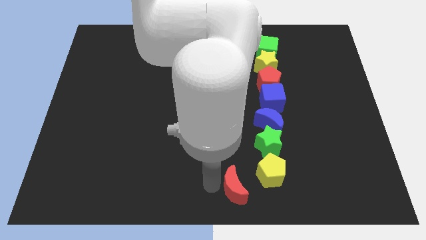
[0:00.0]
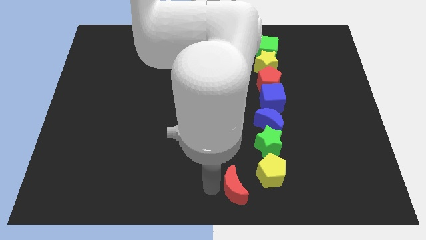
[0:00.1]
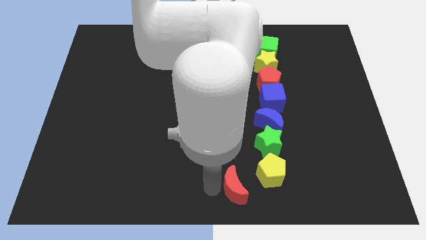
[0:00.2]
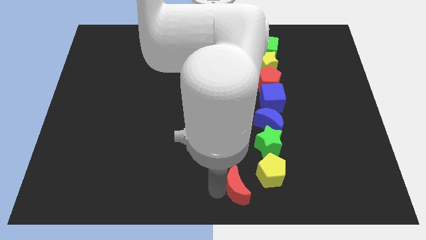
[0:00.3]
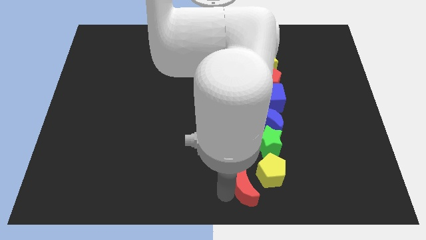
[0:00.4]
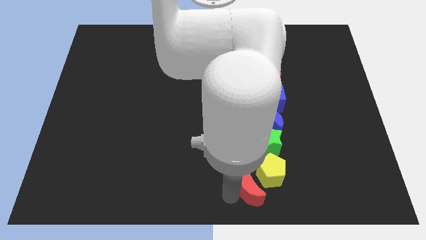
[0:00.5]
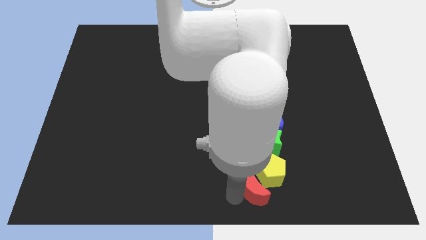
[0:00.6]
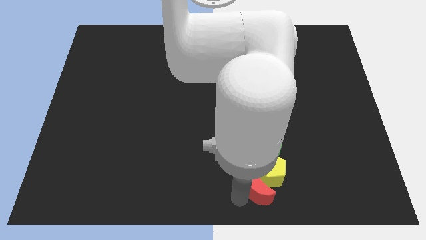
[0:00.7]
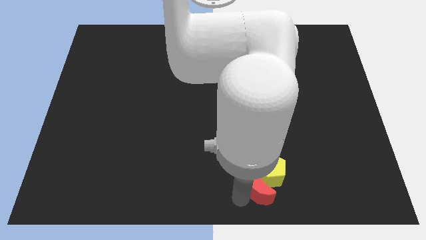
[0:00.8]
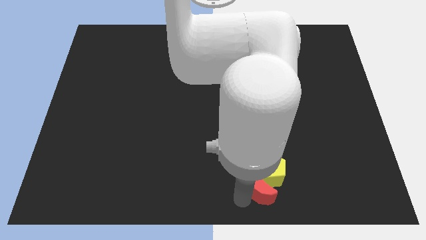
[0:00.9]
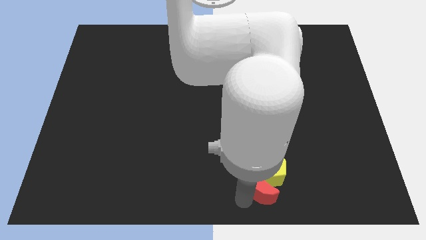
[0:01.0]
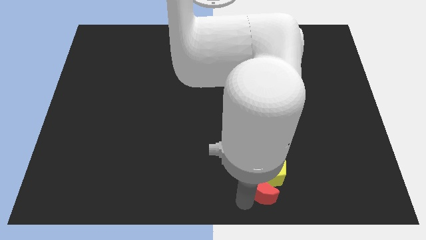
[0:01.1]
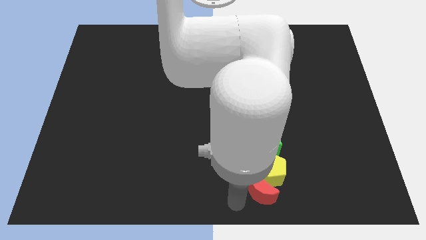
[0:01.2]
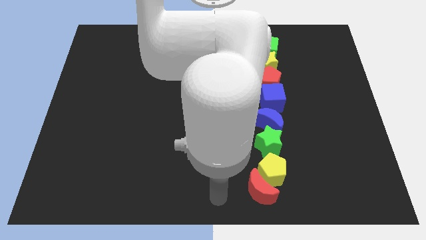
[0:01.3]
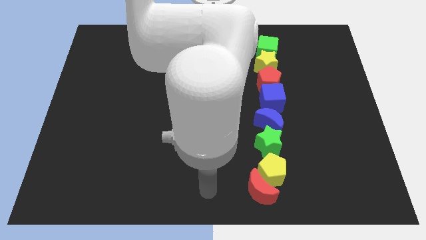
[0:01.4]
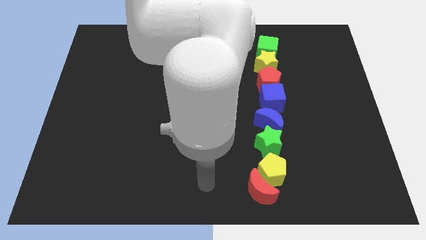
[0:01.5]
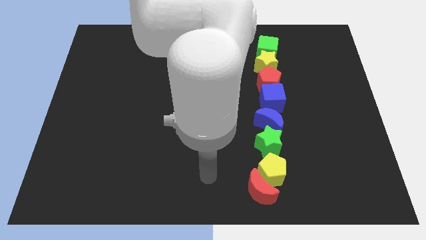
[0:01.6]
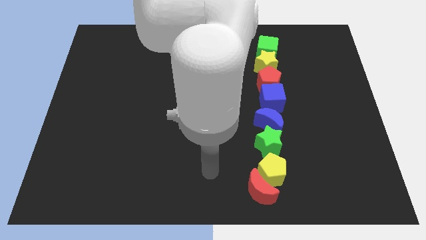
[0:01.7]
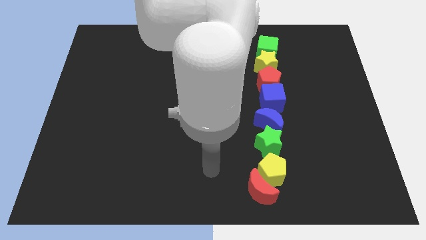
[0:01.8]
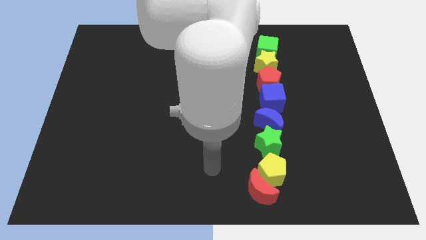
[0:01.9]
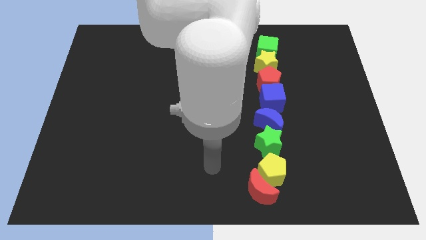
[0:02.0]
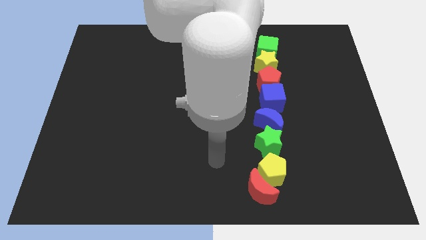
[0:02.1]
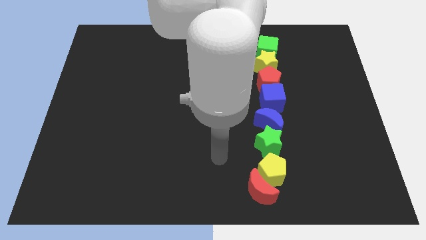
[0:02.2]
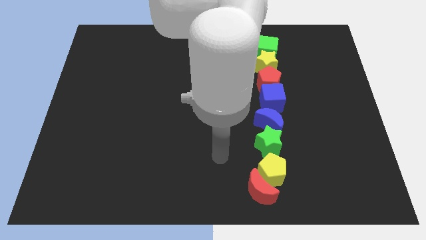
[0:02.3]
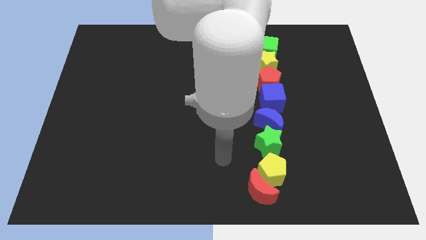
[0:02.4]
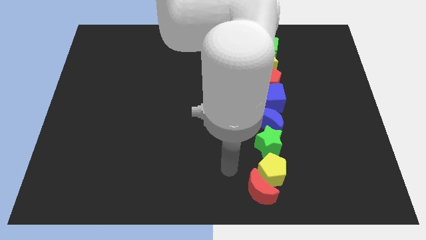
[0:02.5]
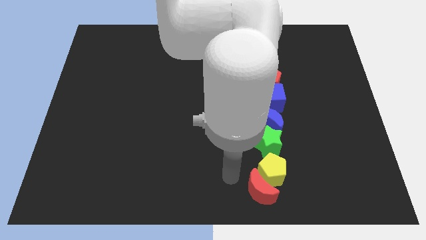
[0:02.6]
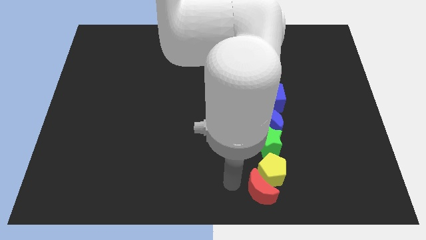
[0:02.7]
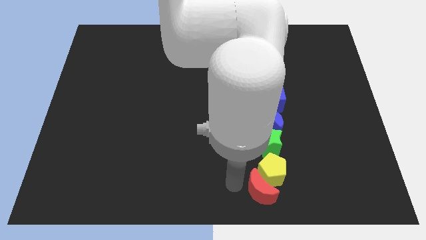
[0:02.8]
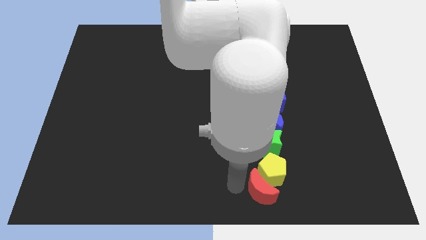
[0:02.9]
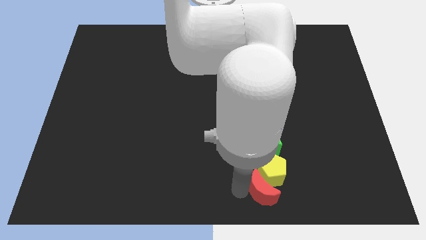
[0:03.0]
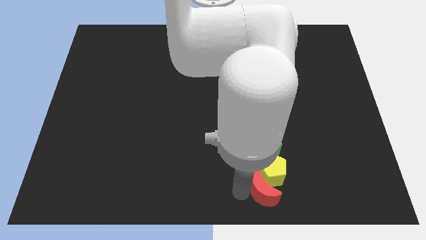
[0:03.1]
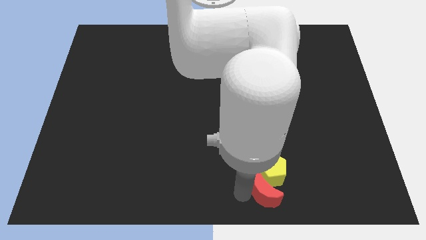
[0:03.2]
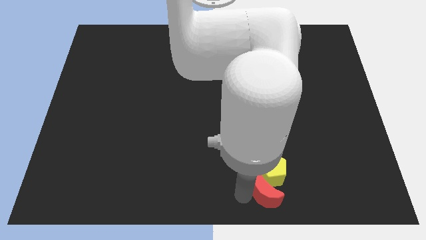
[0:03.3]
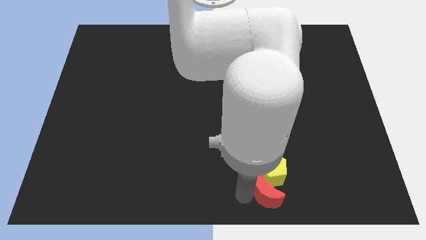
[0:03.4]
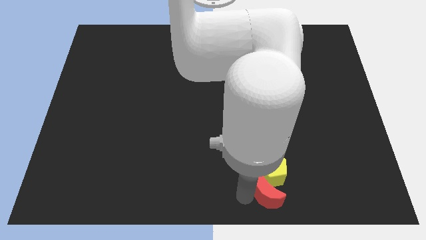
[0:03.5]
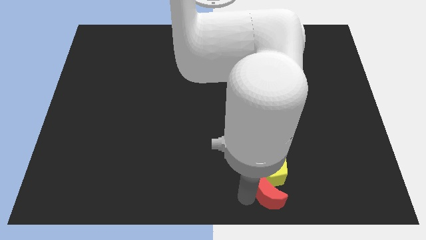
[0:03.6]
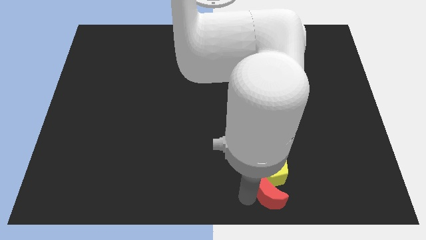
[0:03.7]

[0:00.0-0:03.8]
push the red crescent to the bottom of the yellow pentagon

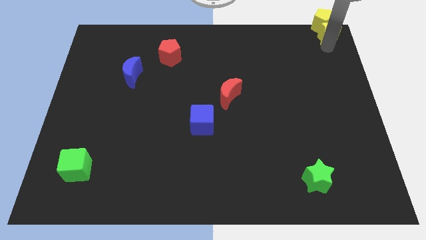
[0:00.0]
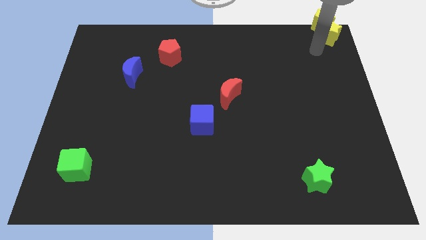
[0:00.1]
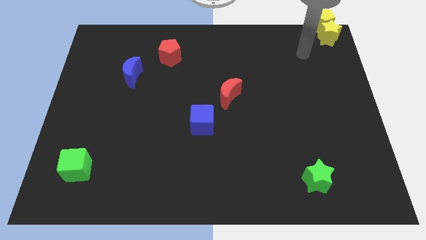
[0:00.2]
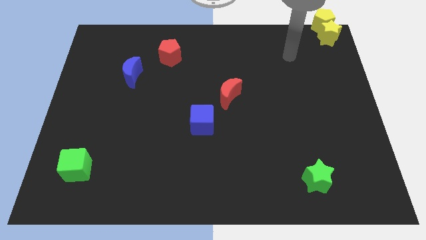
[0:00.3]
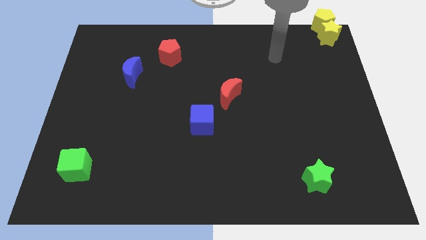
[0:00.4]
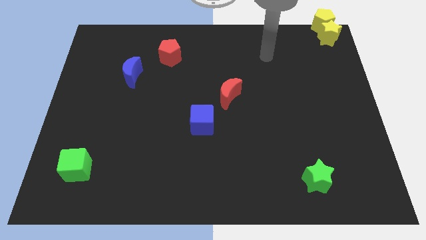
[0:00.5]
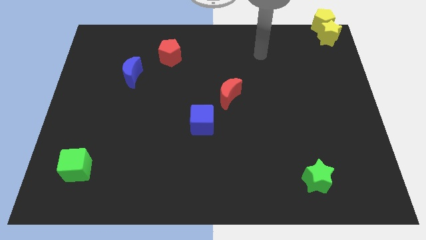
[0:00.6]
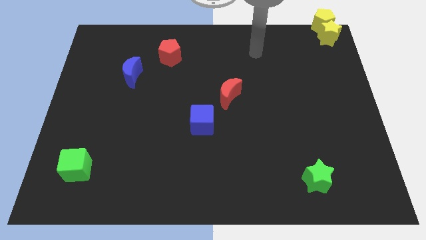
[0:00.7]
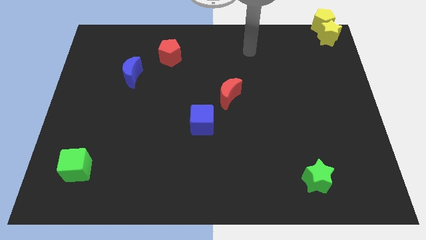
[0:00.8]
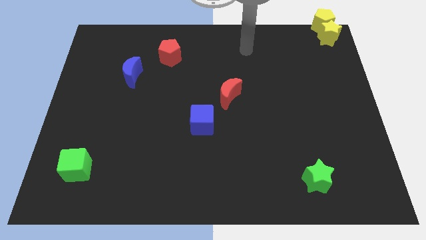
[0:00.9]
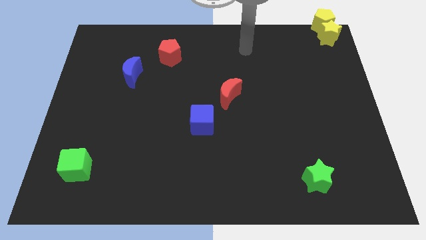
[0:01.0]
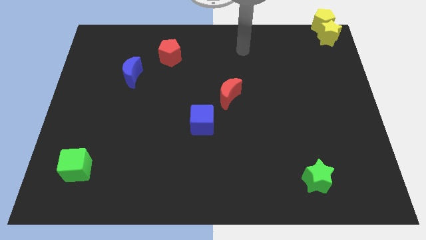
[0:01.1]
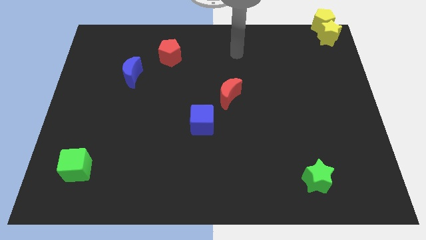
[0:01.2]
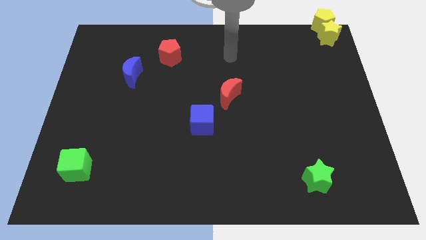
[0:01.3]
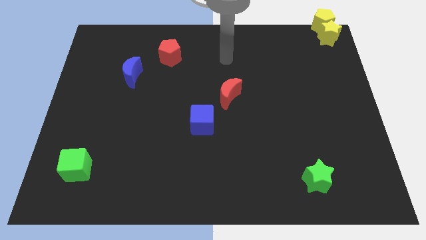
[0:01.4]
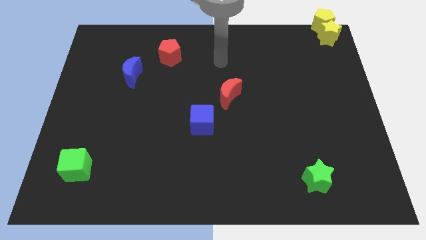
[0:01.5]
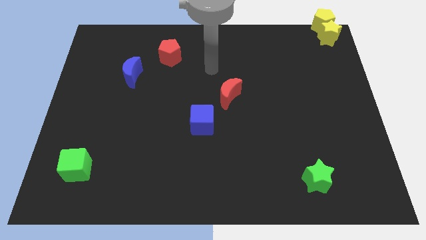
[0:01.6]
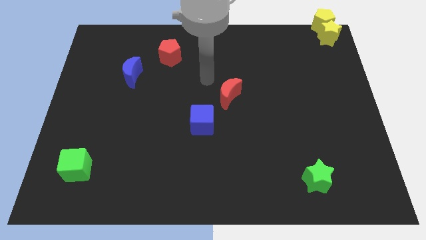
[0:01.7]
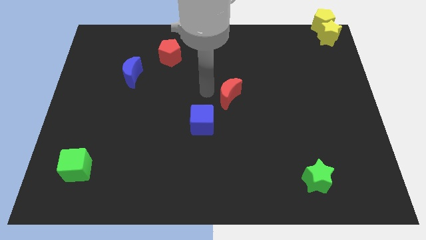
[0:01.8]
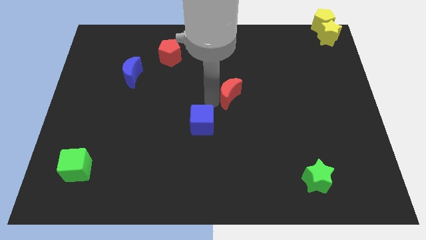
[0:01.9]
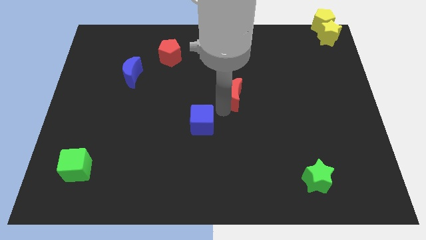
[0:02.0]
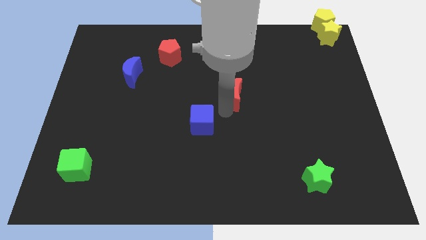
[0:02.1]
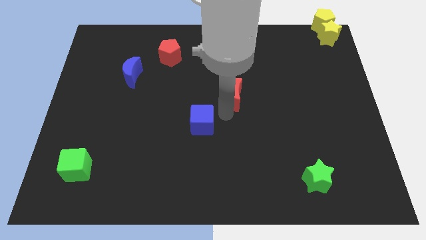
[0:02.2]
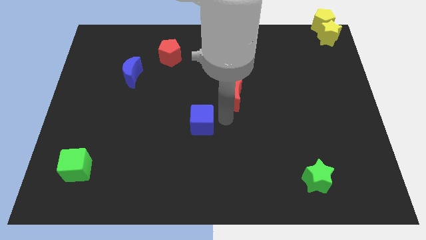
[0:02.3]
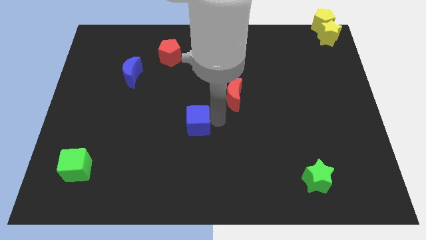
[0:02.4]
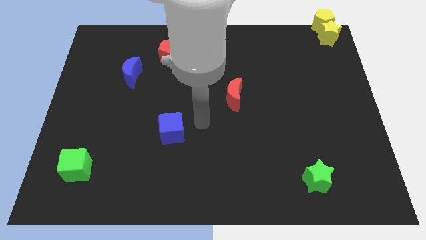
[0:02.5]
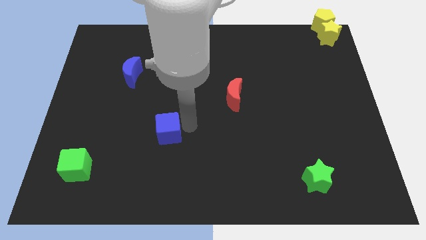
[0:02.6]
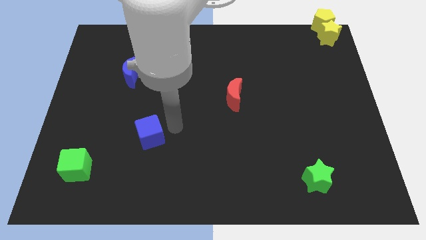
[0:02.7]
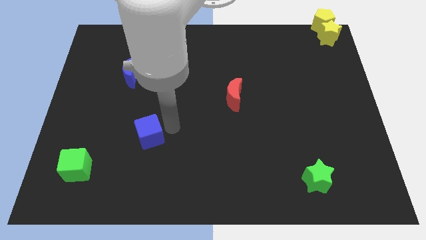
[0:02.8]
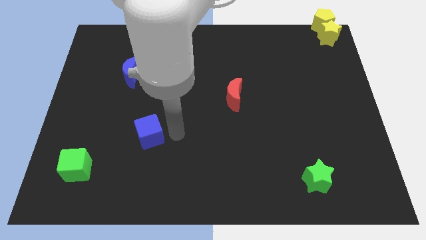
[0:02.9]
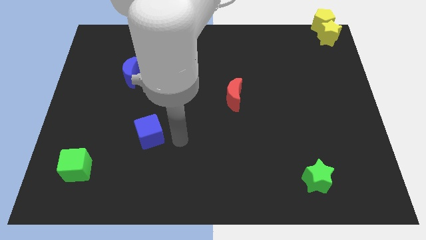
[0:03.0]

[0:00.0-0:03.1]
place the blue cube diagonally to the top right of the green cube

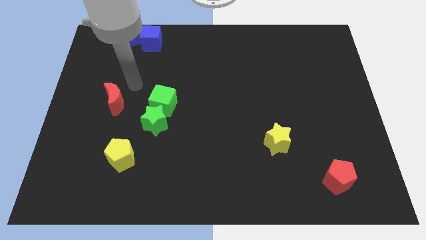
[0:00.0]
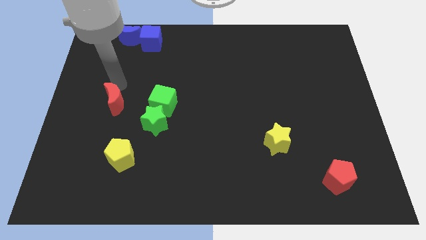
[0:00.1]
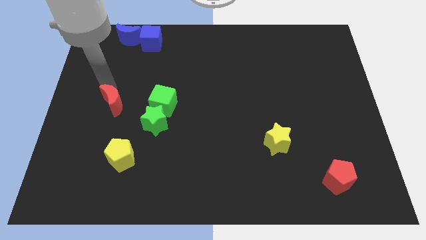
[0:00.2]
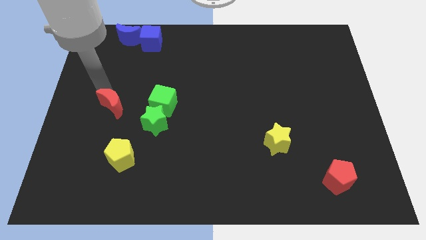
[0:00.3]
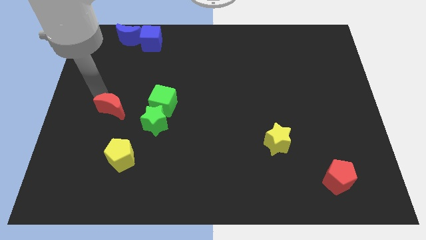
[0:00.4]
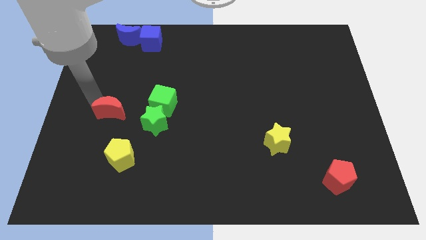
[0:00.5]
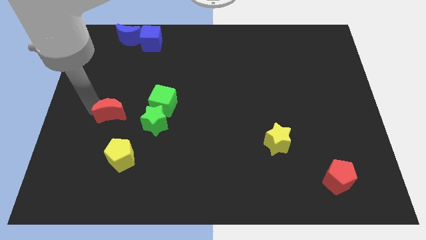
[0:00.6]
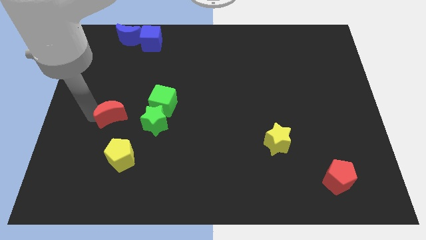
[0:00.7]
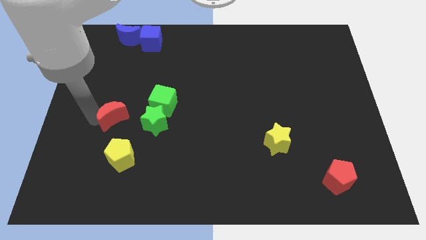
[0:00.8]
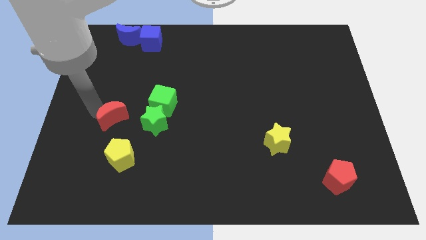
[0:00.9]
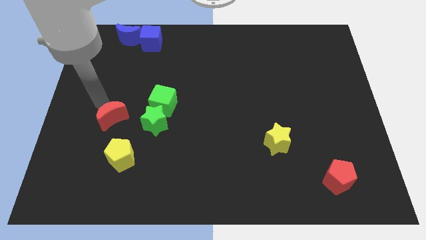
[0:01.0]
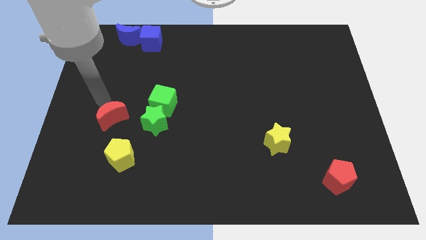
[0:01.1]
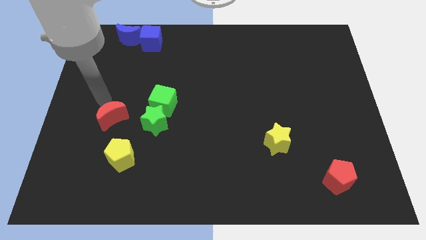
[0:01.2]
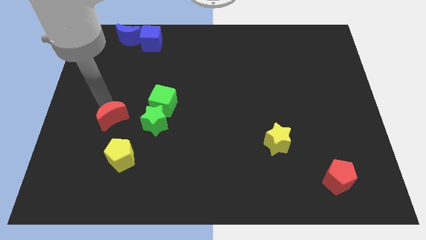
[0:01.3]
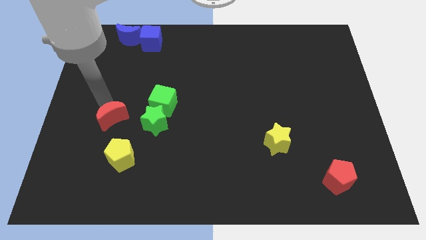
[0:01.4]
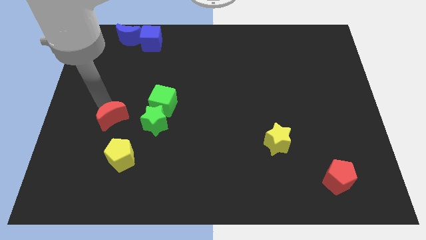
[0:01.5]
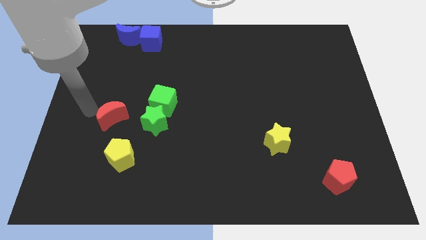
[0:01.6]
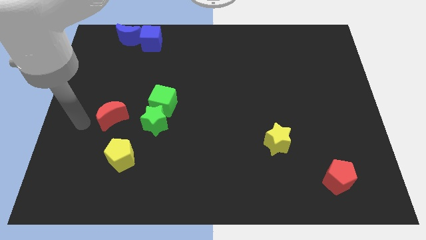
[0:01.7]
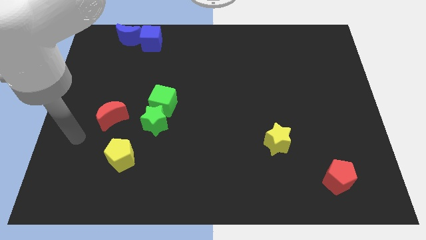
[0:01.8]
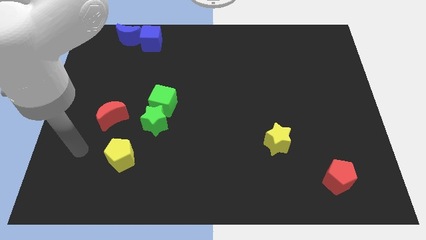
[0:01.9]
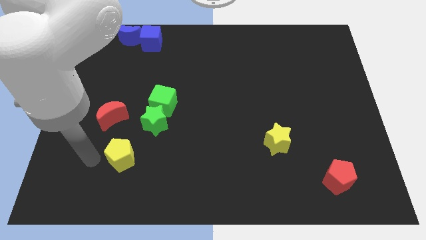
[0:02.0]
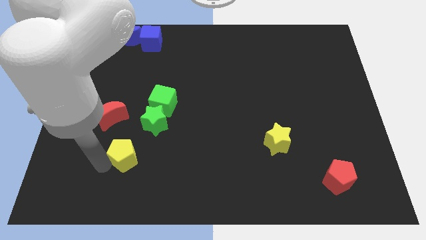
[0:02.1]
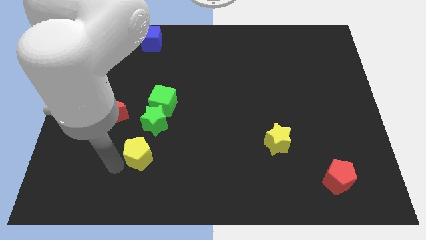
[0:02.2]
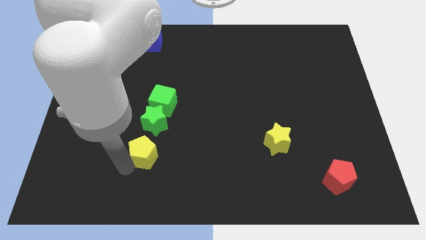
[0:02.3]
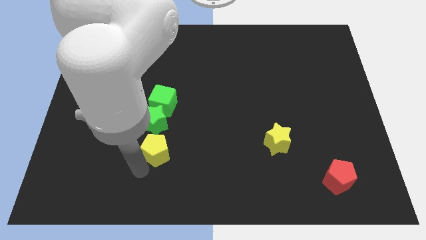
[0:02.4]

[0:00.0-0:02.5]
place the yellow pentagon down to the green star
